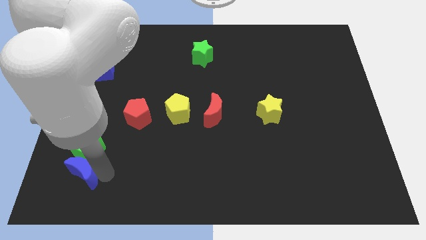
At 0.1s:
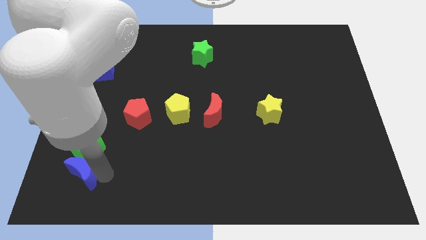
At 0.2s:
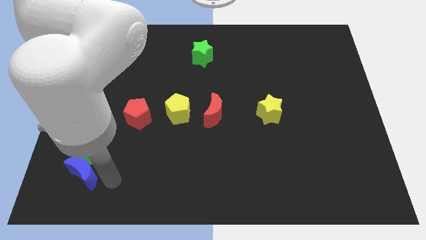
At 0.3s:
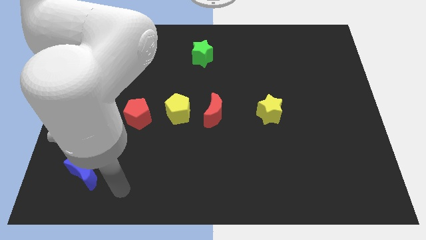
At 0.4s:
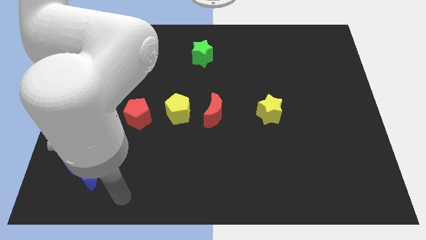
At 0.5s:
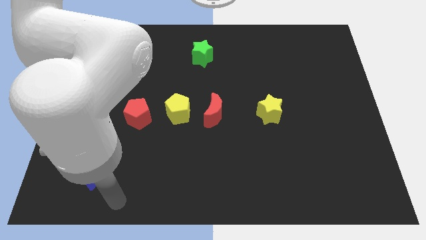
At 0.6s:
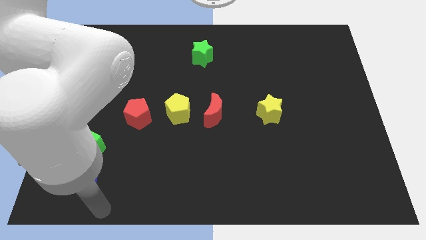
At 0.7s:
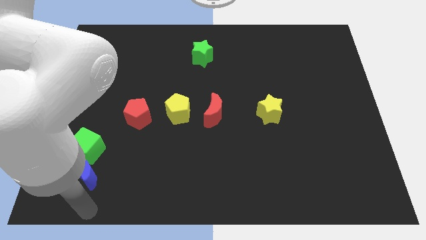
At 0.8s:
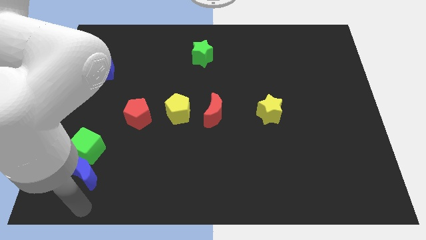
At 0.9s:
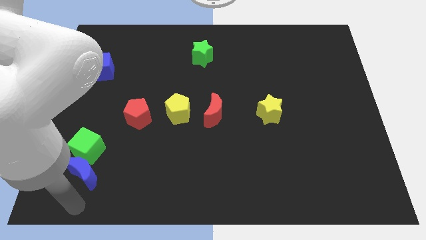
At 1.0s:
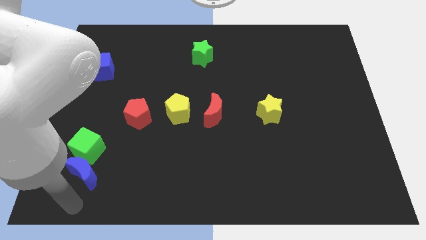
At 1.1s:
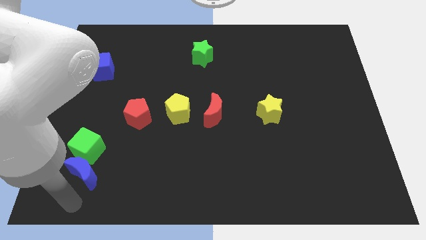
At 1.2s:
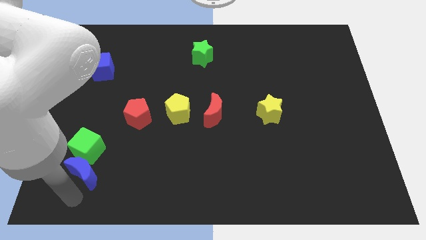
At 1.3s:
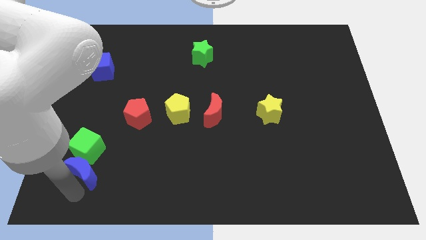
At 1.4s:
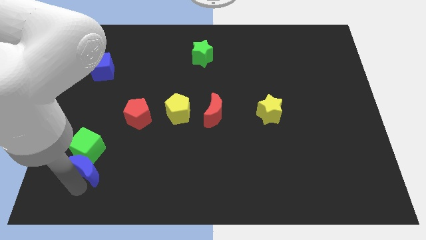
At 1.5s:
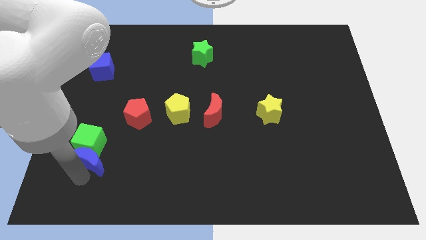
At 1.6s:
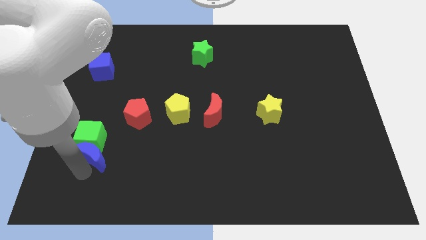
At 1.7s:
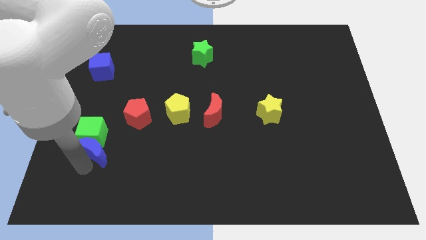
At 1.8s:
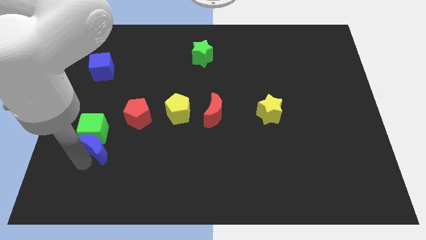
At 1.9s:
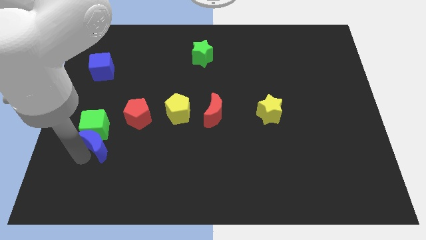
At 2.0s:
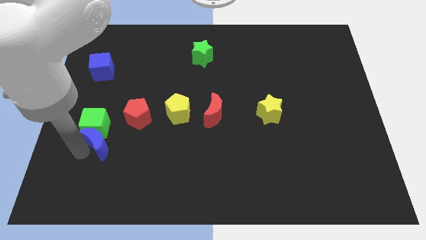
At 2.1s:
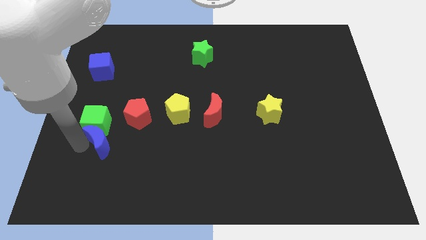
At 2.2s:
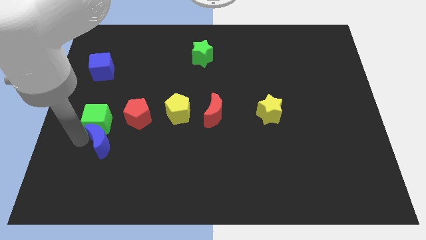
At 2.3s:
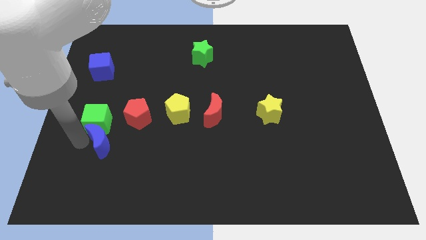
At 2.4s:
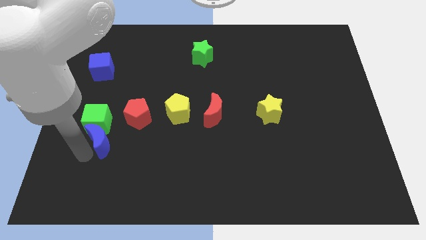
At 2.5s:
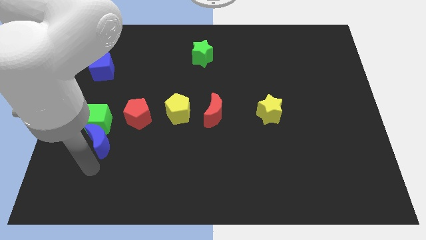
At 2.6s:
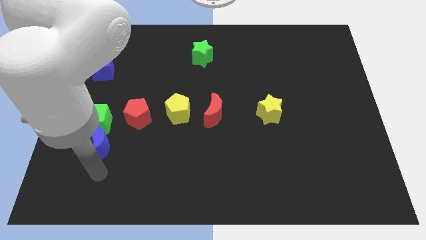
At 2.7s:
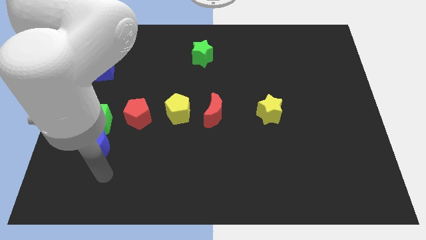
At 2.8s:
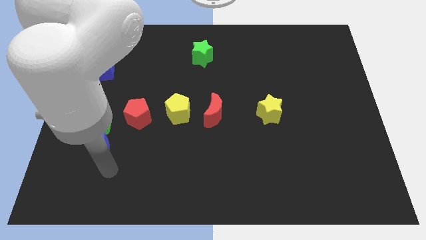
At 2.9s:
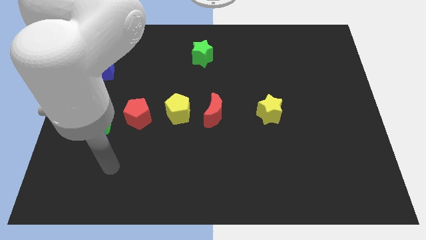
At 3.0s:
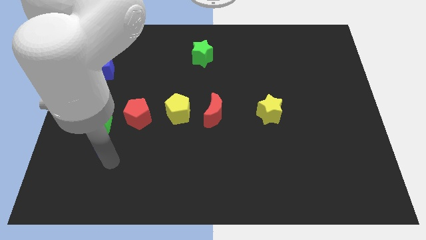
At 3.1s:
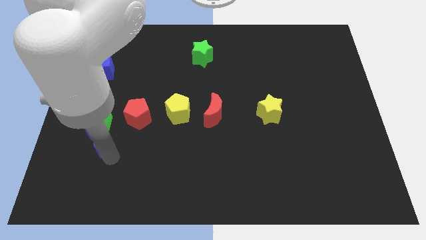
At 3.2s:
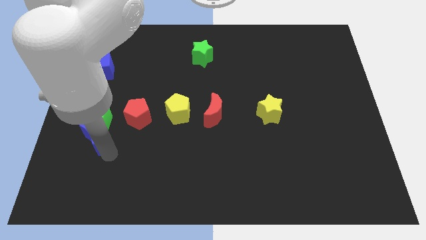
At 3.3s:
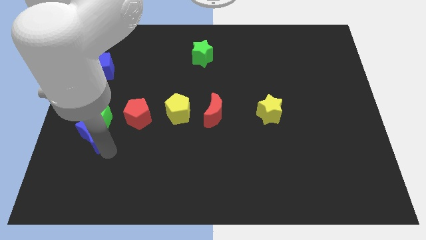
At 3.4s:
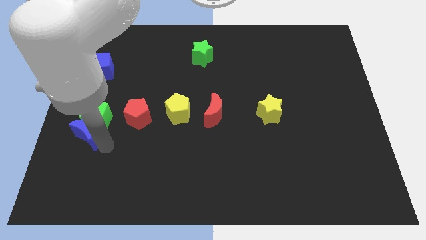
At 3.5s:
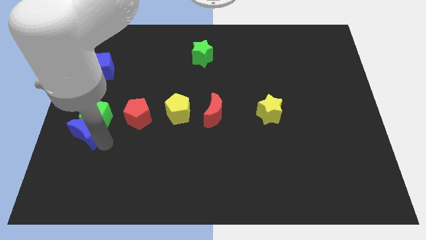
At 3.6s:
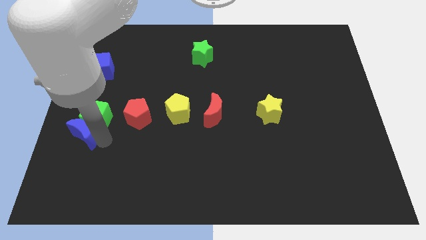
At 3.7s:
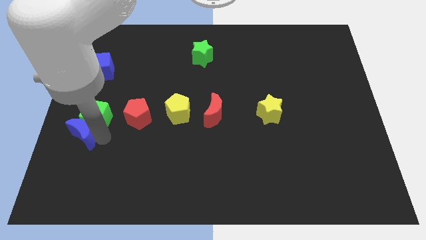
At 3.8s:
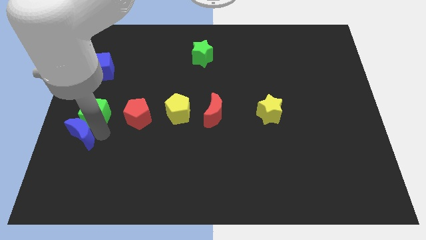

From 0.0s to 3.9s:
put the green cube and blue crescent to the left side of the red pentagon

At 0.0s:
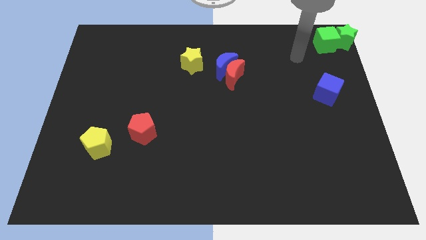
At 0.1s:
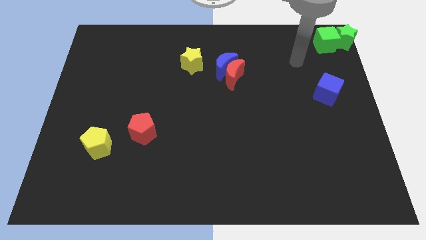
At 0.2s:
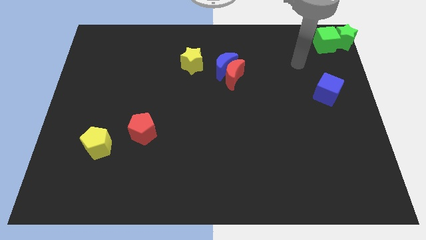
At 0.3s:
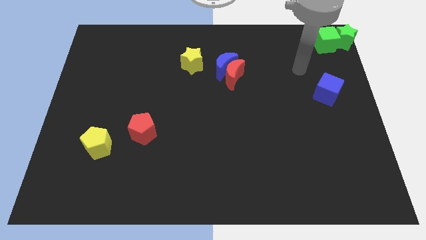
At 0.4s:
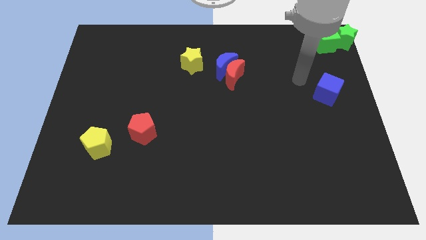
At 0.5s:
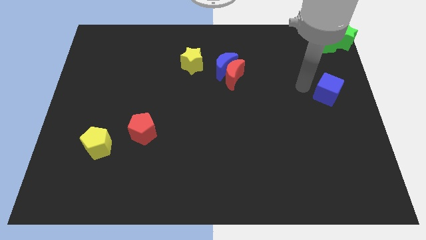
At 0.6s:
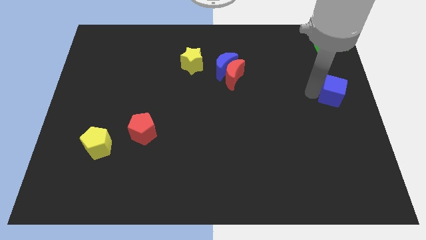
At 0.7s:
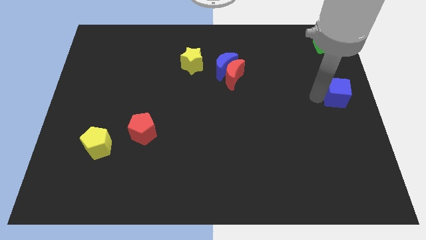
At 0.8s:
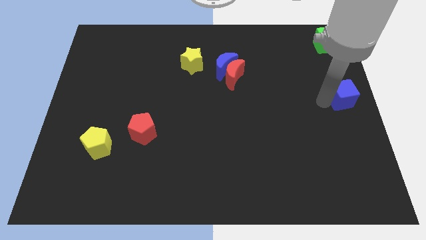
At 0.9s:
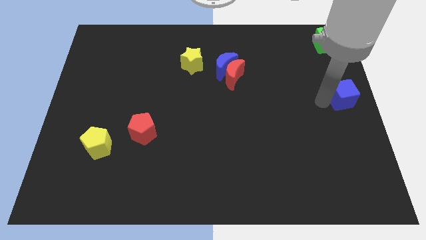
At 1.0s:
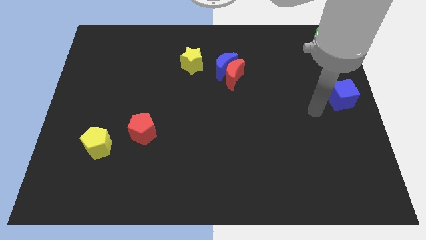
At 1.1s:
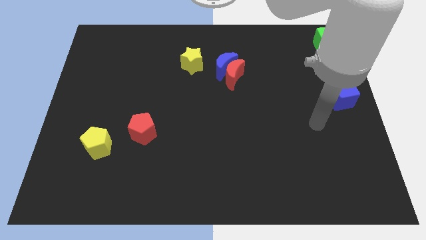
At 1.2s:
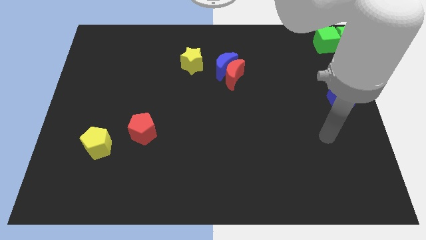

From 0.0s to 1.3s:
move the blue cube slightly to the right center of the board

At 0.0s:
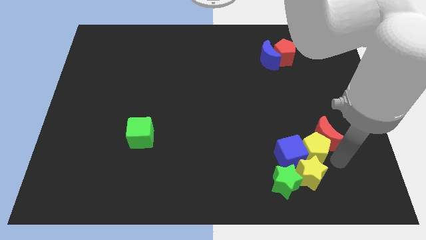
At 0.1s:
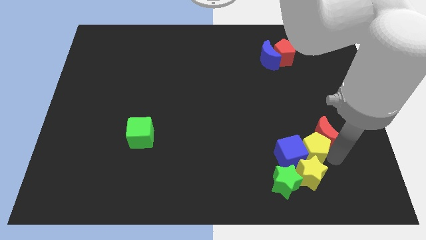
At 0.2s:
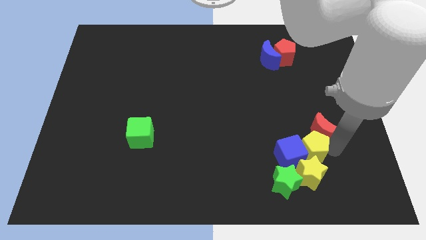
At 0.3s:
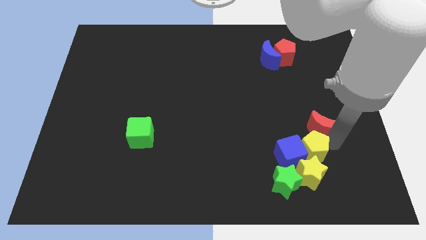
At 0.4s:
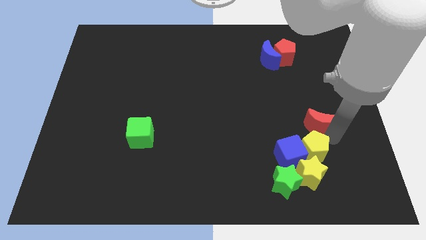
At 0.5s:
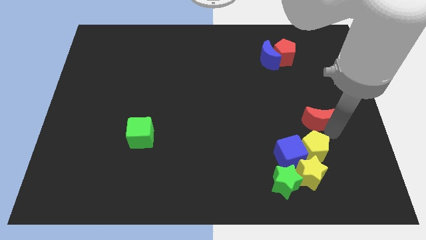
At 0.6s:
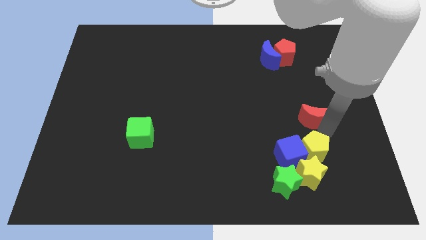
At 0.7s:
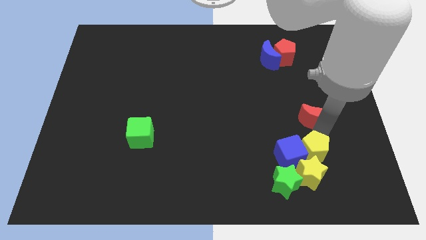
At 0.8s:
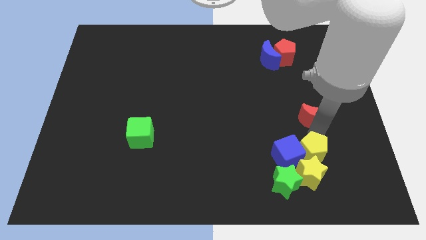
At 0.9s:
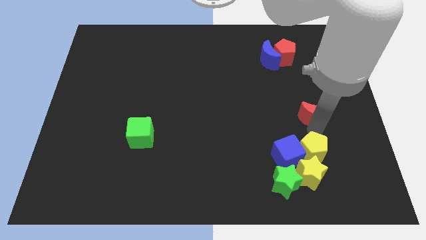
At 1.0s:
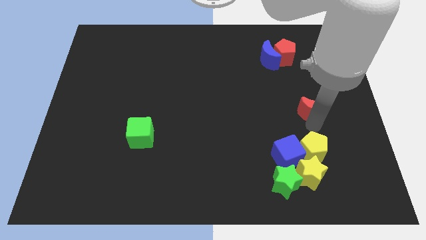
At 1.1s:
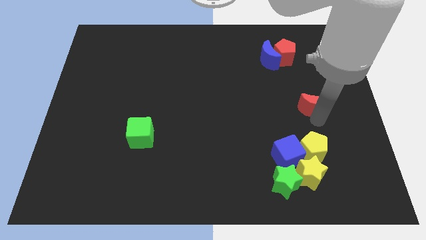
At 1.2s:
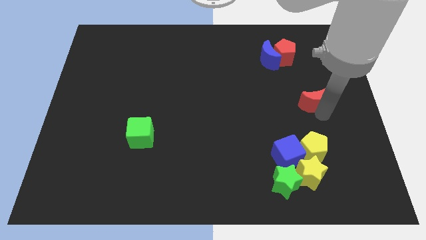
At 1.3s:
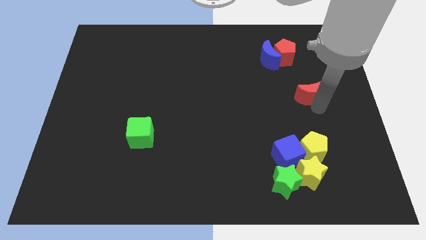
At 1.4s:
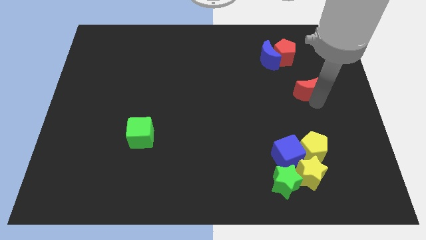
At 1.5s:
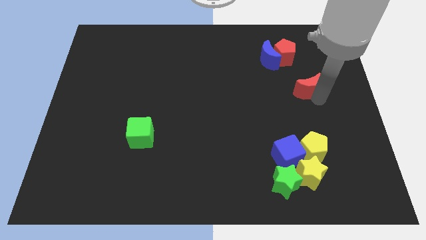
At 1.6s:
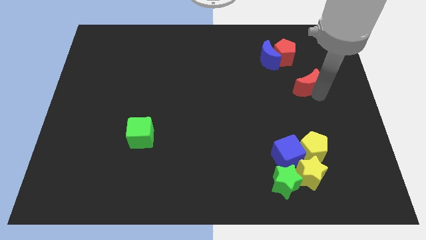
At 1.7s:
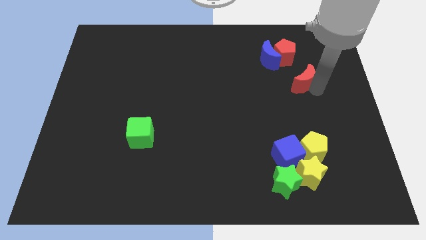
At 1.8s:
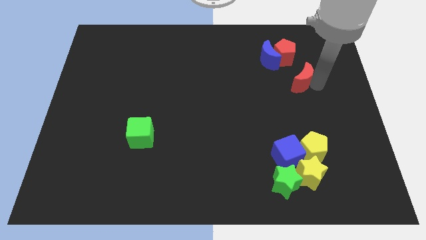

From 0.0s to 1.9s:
move red crescent towards red pentagon

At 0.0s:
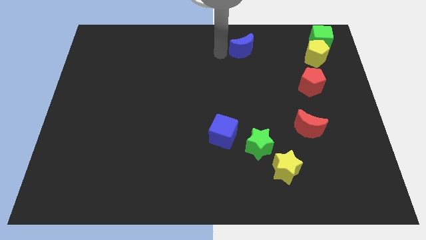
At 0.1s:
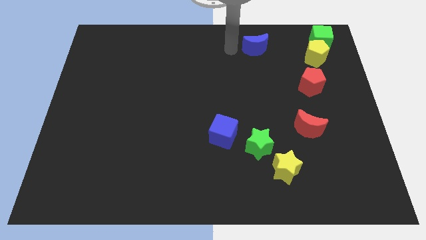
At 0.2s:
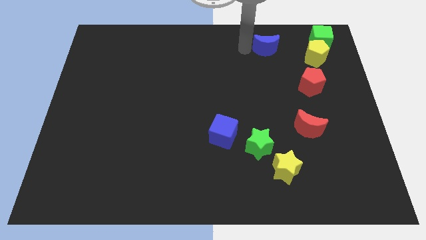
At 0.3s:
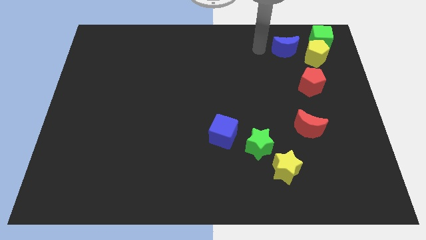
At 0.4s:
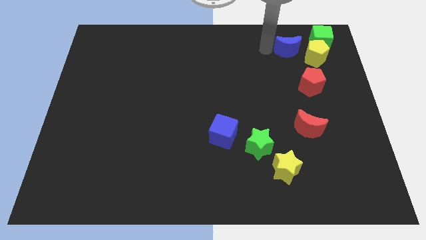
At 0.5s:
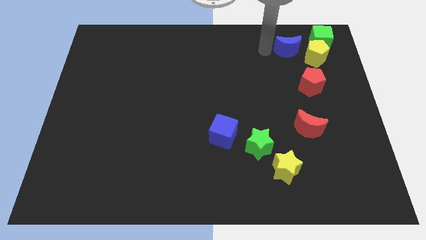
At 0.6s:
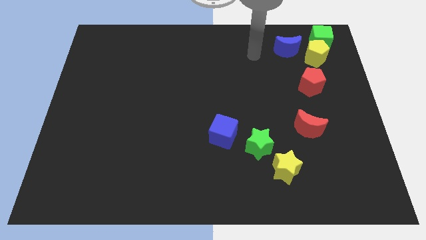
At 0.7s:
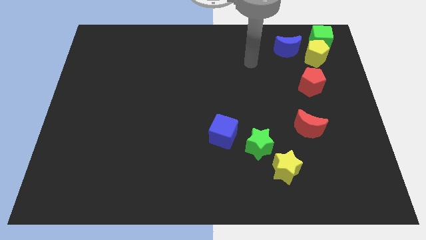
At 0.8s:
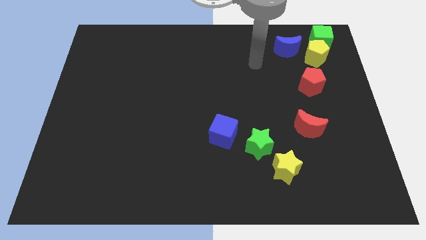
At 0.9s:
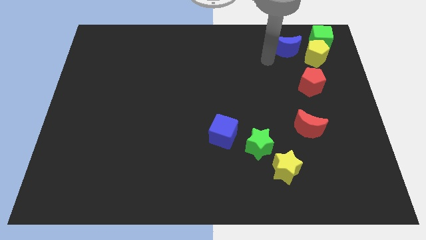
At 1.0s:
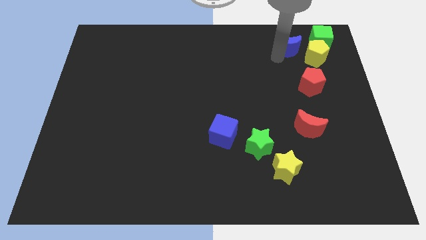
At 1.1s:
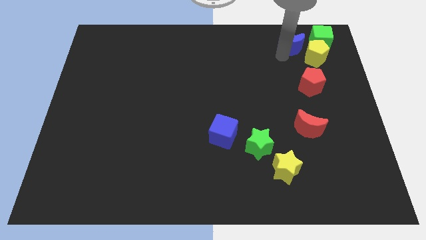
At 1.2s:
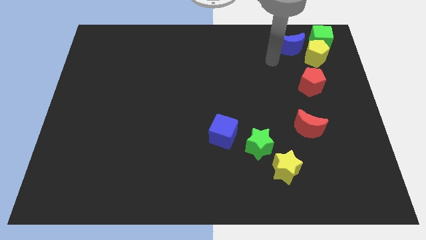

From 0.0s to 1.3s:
push the blue moon towards green cube

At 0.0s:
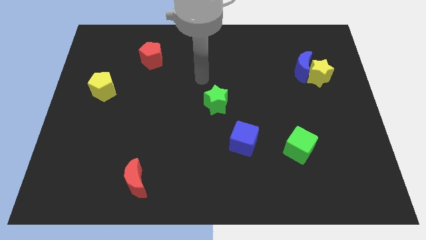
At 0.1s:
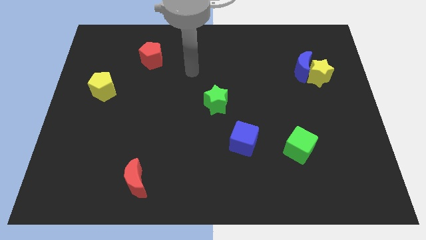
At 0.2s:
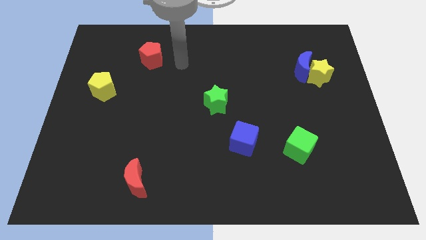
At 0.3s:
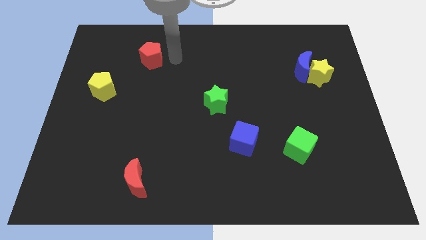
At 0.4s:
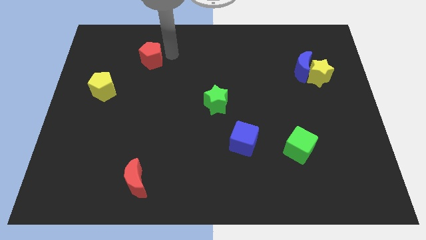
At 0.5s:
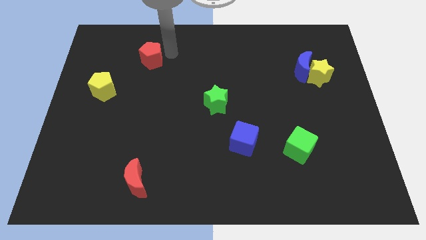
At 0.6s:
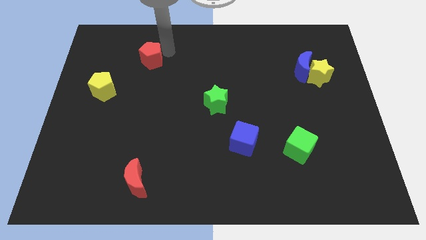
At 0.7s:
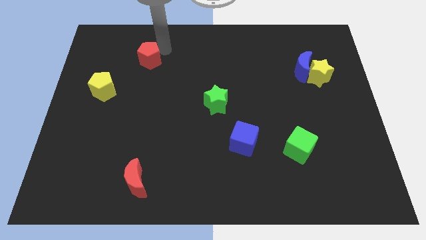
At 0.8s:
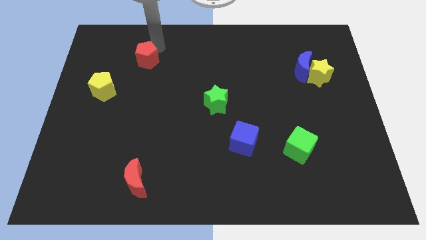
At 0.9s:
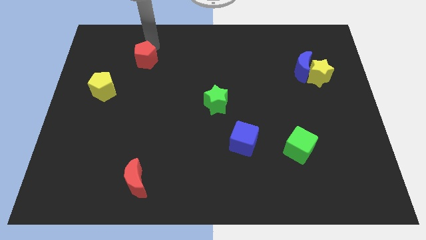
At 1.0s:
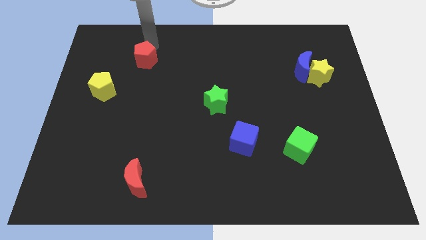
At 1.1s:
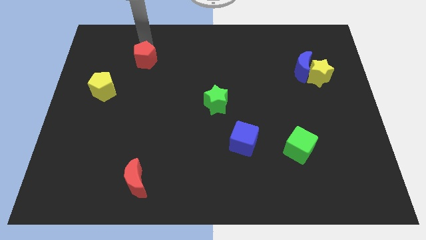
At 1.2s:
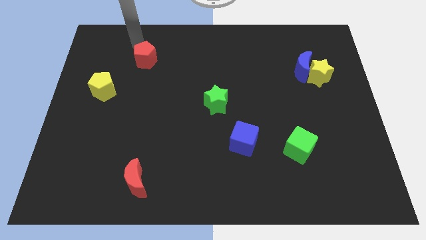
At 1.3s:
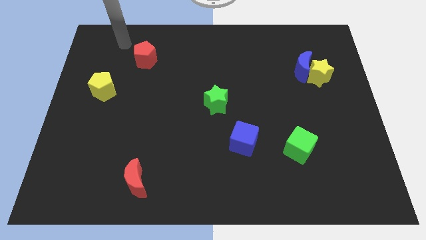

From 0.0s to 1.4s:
move the arm towards the red pentagon
